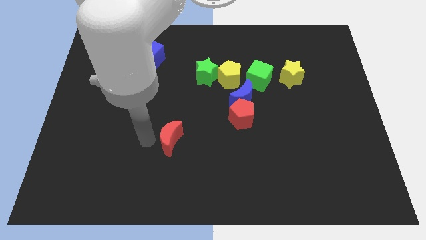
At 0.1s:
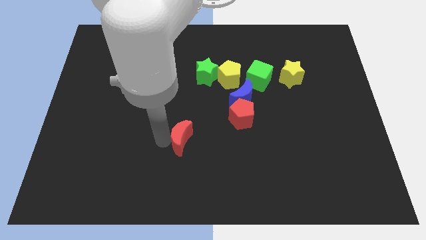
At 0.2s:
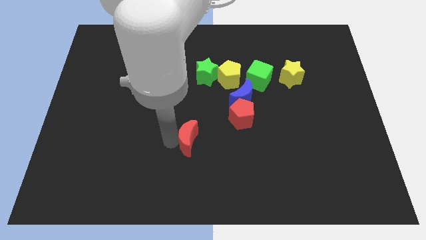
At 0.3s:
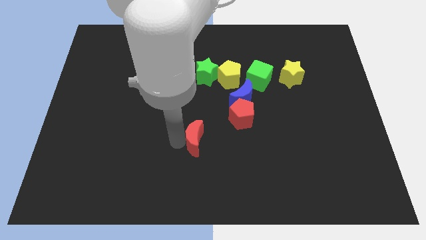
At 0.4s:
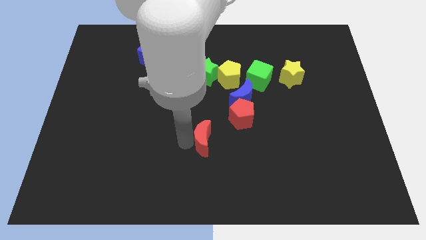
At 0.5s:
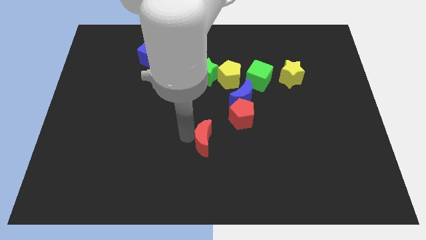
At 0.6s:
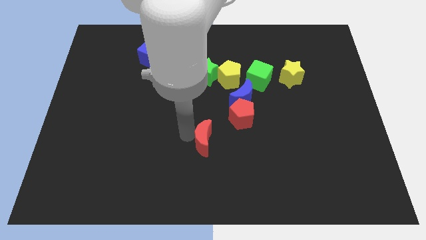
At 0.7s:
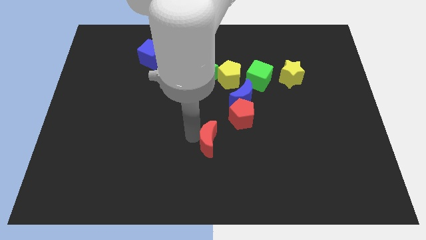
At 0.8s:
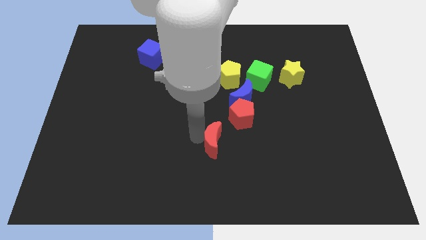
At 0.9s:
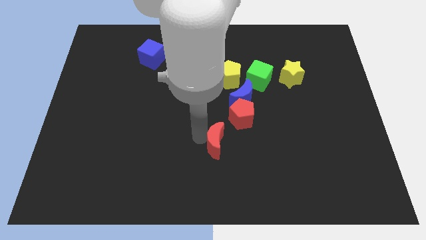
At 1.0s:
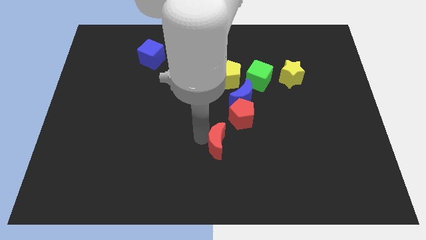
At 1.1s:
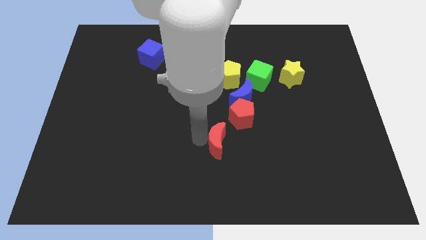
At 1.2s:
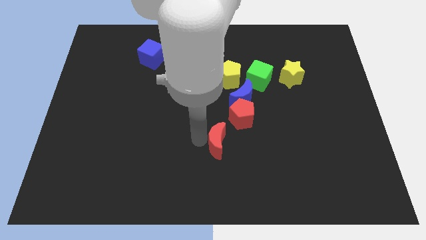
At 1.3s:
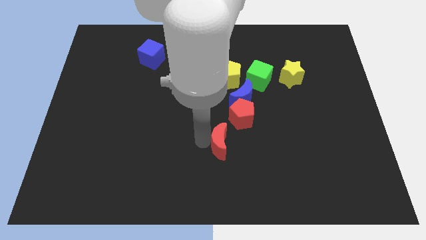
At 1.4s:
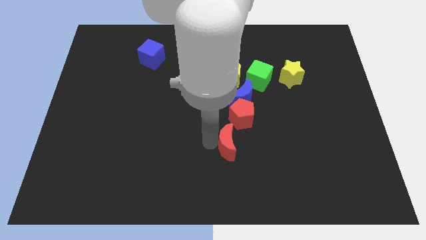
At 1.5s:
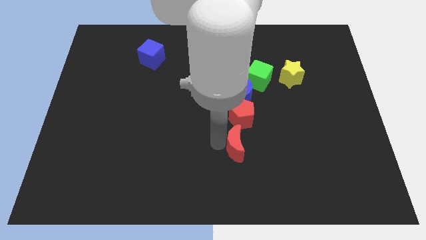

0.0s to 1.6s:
move red crescent to the bottom of the red pentagon

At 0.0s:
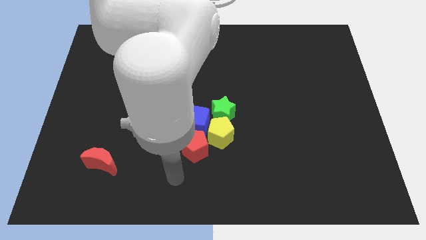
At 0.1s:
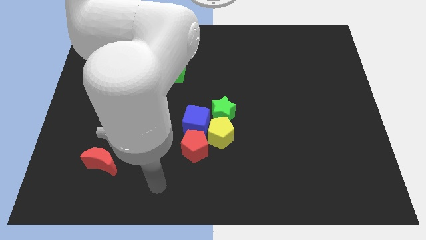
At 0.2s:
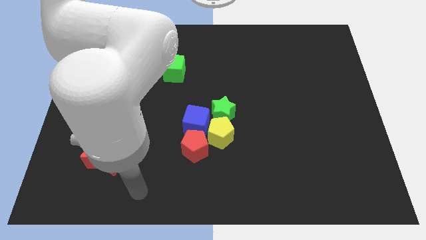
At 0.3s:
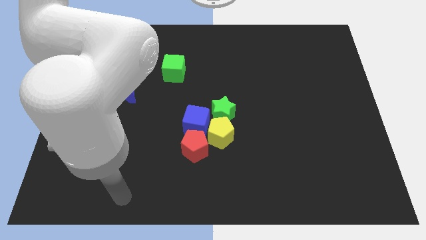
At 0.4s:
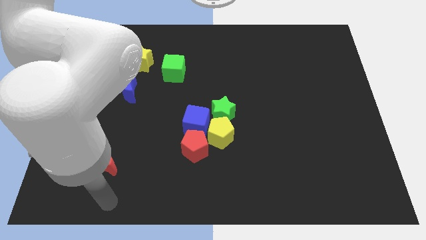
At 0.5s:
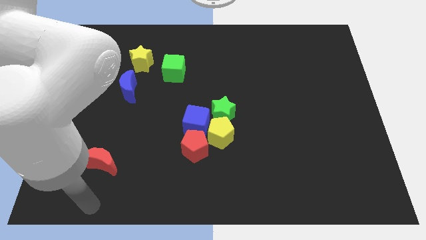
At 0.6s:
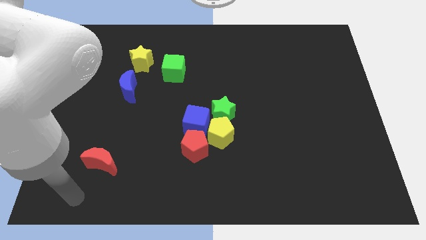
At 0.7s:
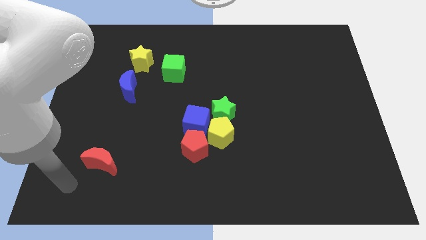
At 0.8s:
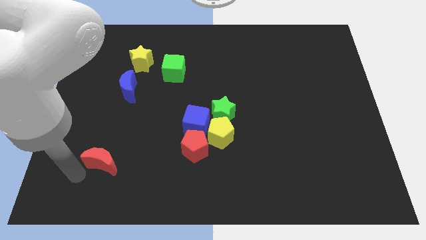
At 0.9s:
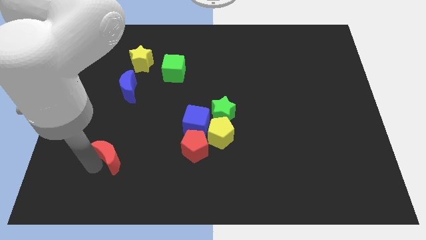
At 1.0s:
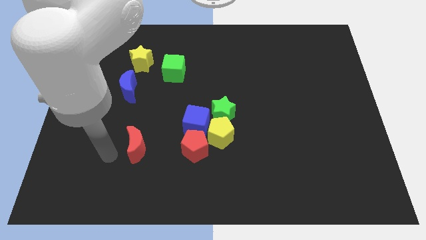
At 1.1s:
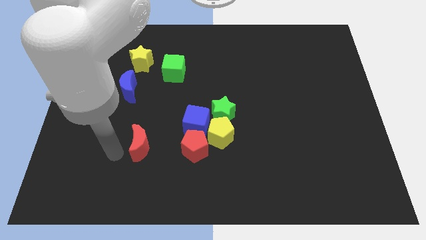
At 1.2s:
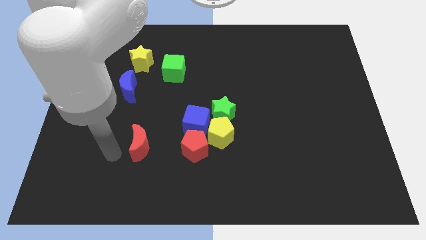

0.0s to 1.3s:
move the red moon towards the red pentagon

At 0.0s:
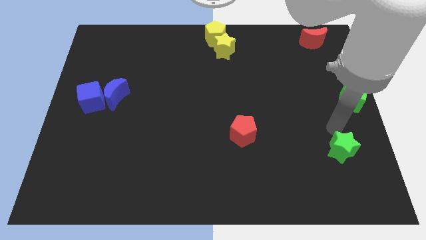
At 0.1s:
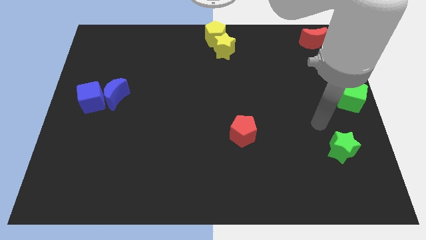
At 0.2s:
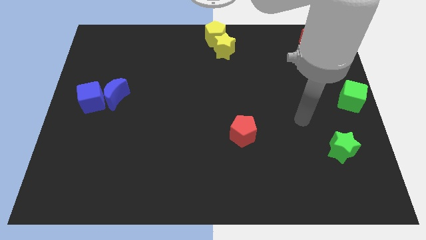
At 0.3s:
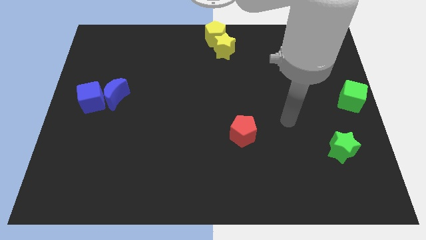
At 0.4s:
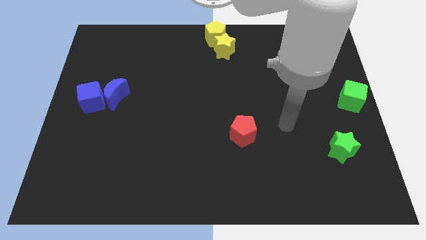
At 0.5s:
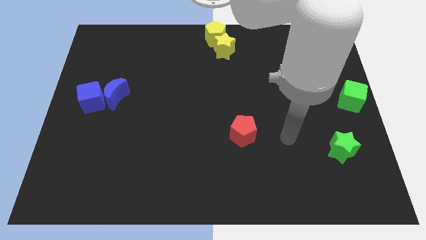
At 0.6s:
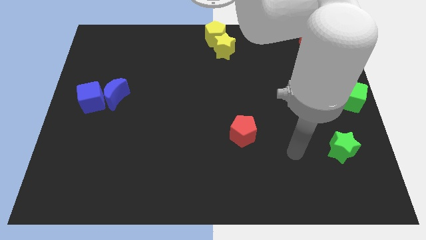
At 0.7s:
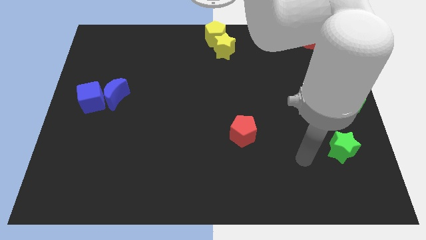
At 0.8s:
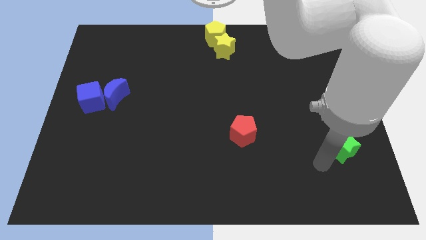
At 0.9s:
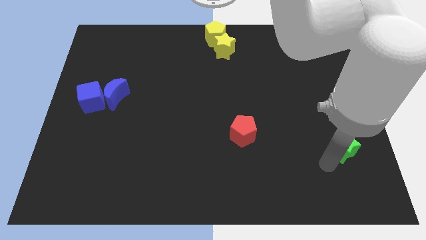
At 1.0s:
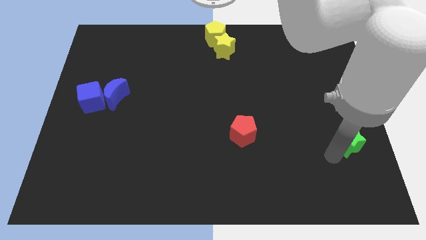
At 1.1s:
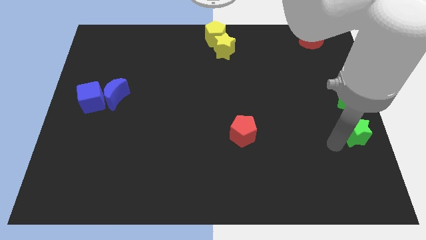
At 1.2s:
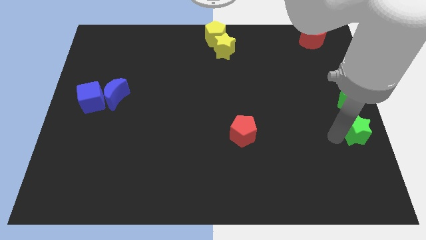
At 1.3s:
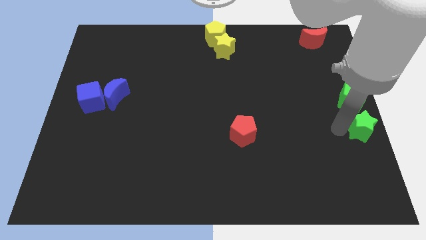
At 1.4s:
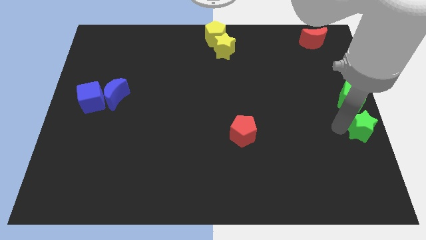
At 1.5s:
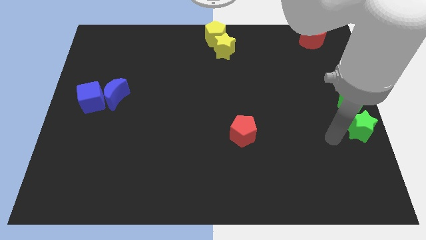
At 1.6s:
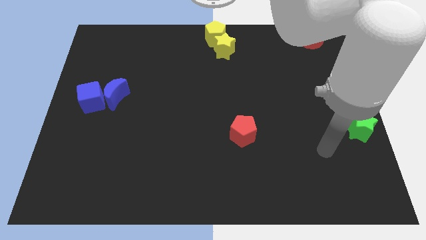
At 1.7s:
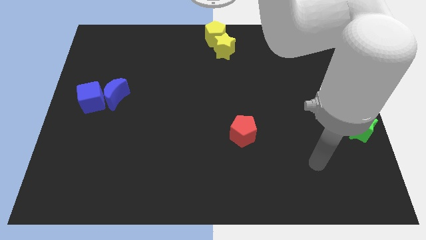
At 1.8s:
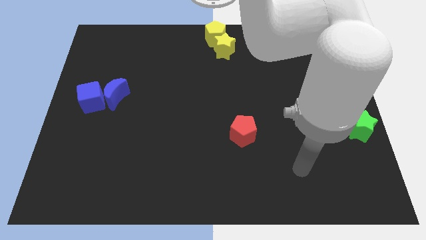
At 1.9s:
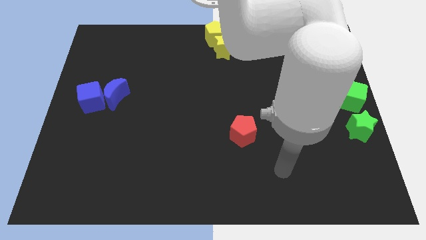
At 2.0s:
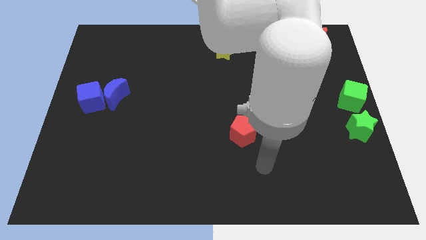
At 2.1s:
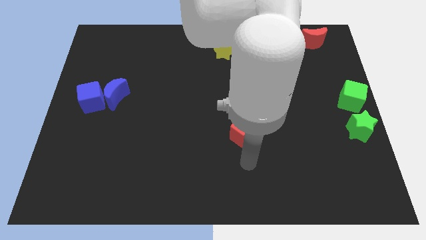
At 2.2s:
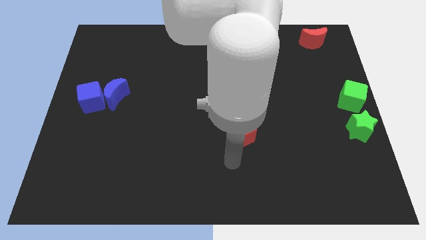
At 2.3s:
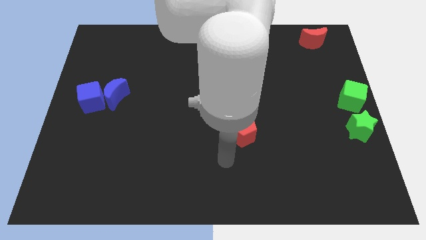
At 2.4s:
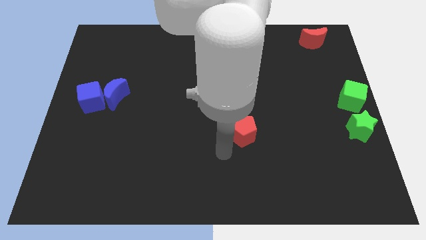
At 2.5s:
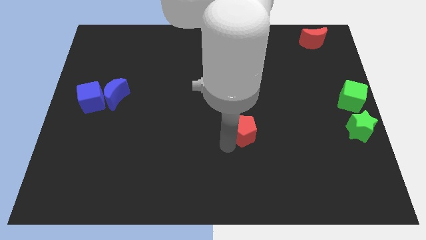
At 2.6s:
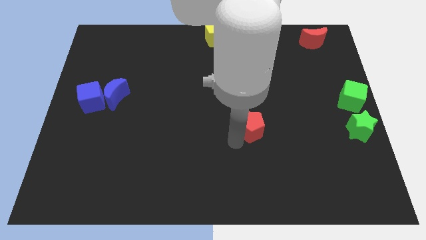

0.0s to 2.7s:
move the green star near to the green cube

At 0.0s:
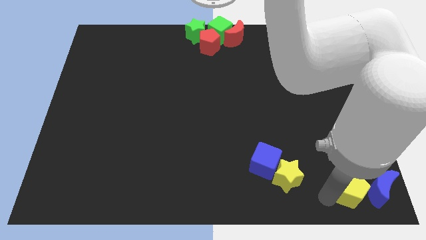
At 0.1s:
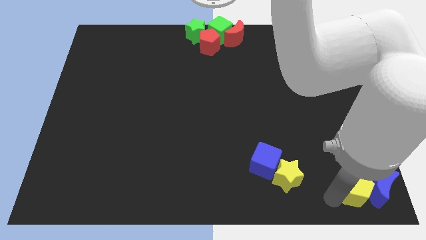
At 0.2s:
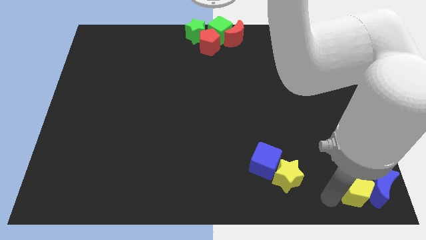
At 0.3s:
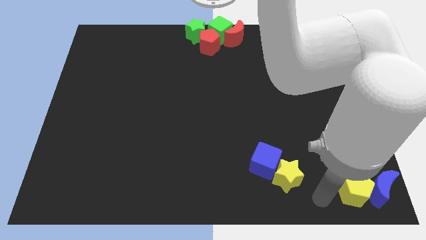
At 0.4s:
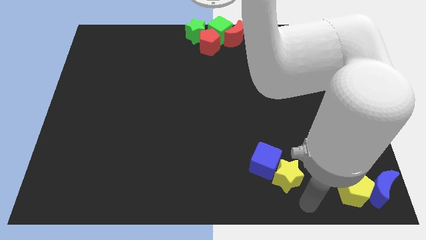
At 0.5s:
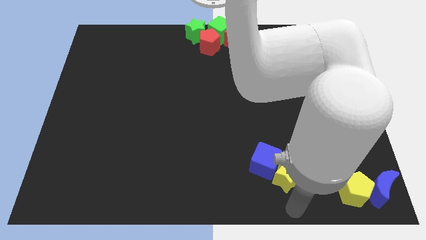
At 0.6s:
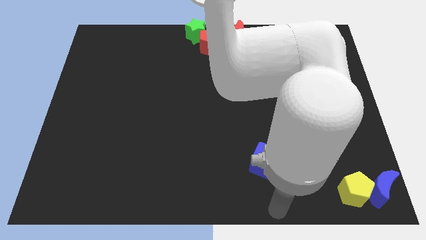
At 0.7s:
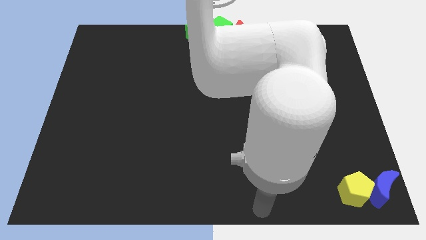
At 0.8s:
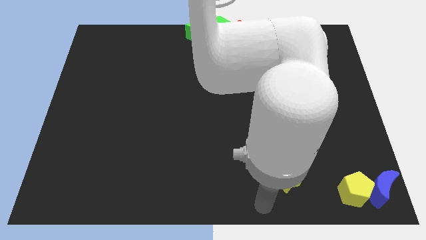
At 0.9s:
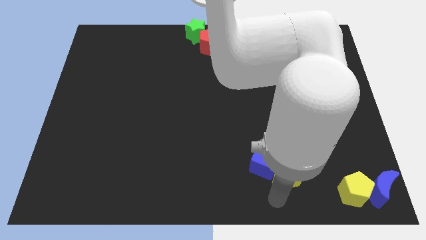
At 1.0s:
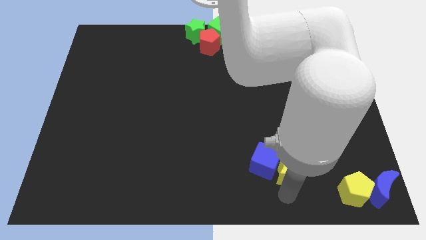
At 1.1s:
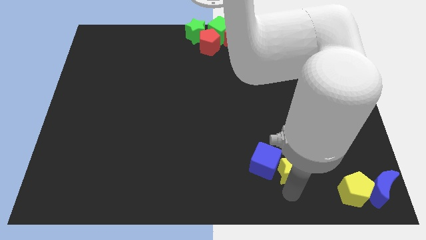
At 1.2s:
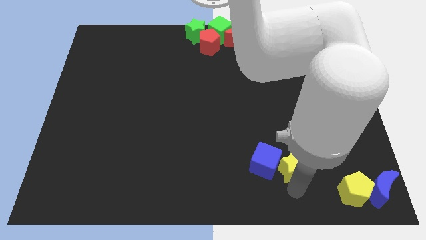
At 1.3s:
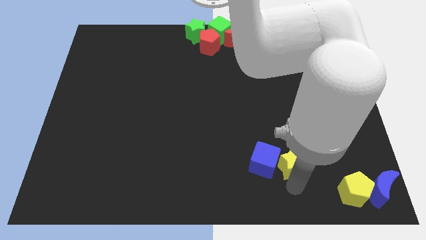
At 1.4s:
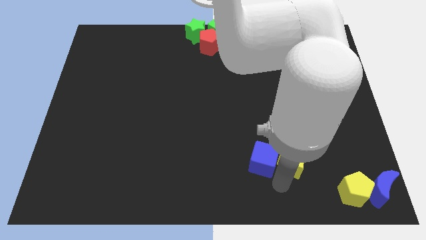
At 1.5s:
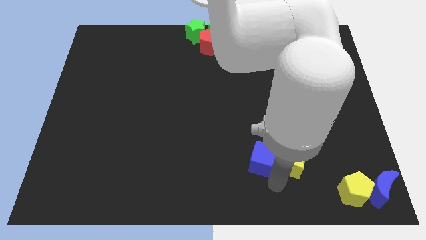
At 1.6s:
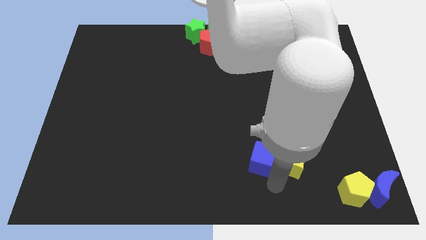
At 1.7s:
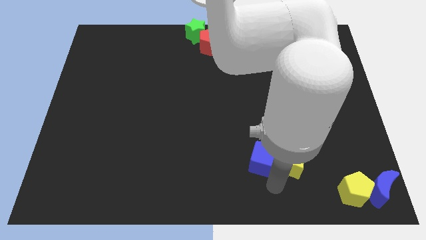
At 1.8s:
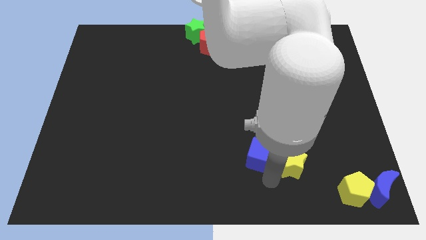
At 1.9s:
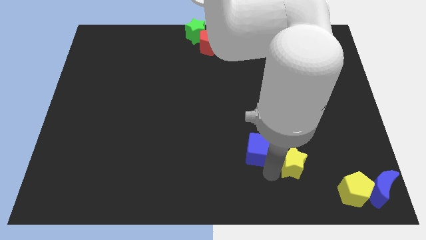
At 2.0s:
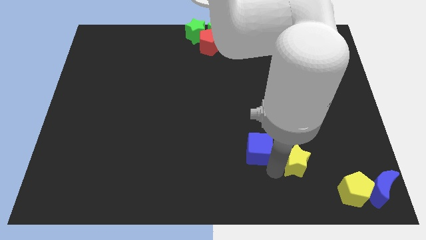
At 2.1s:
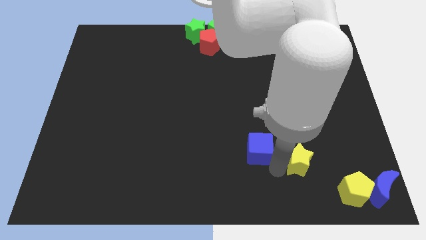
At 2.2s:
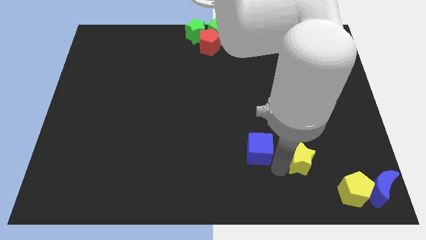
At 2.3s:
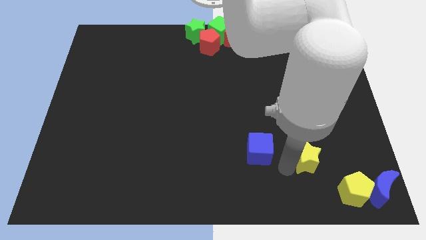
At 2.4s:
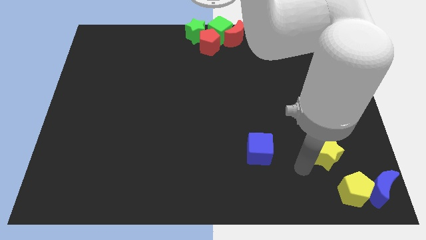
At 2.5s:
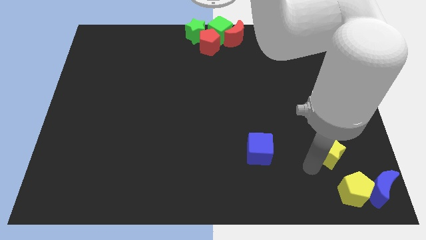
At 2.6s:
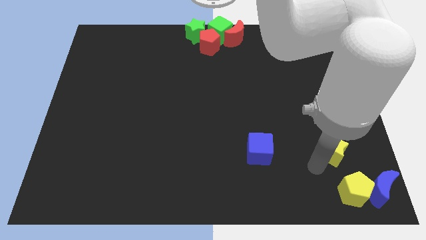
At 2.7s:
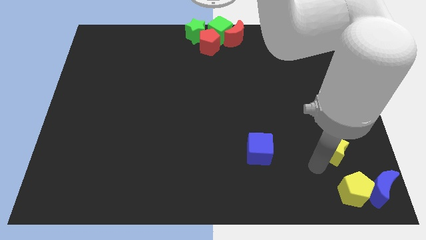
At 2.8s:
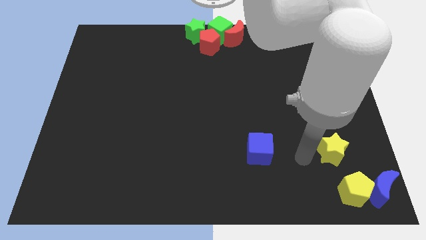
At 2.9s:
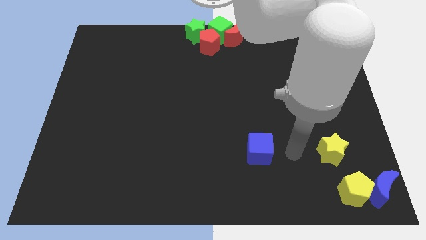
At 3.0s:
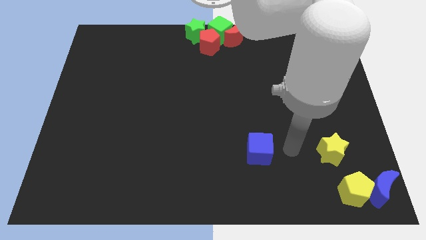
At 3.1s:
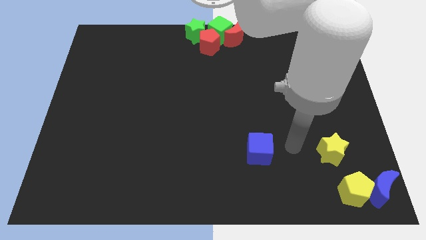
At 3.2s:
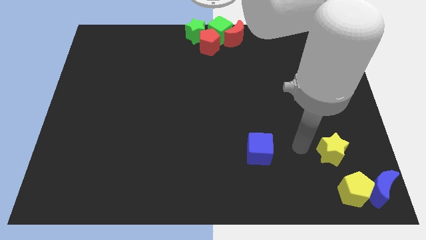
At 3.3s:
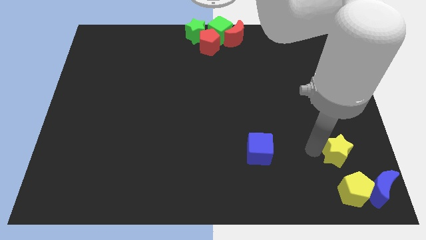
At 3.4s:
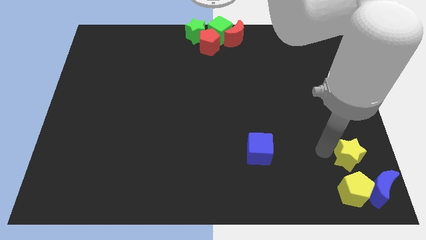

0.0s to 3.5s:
separate the blue cube and yellow star
